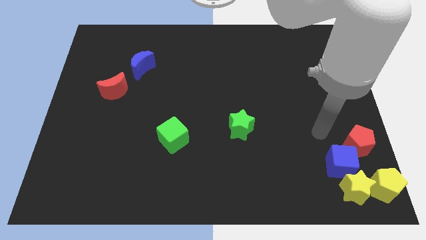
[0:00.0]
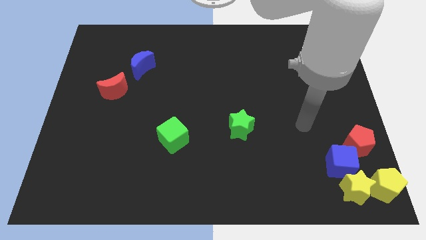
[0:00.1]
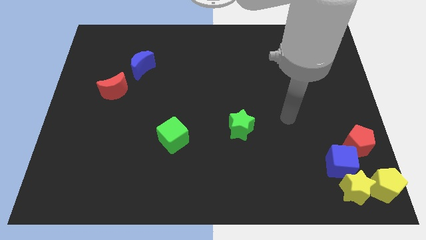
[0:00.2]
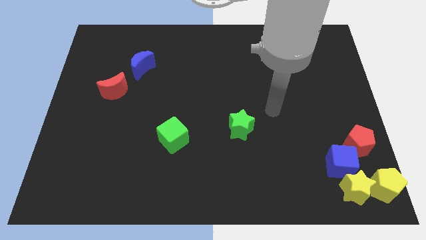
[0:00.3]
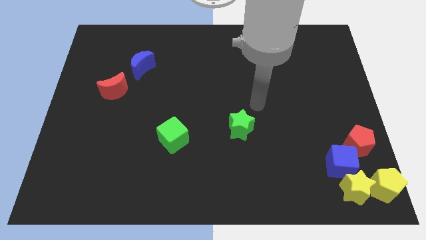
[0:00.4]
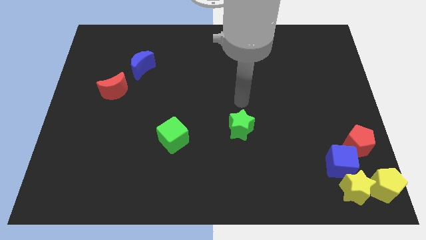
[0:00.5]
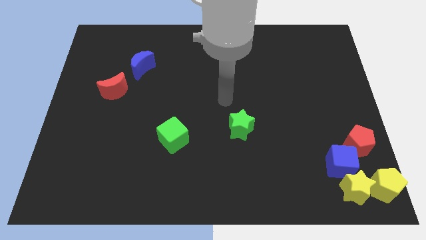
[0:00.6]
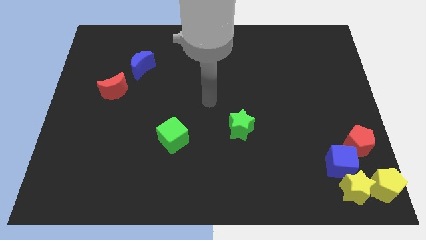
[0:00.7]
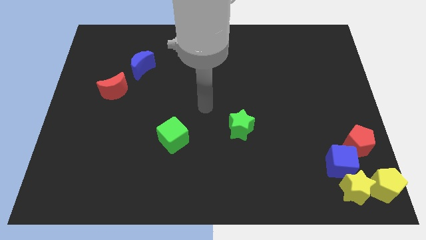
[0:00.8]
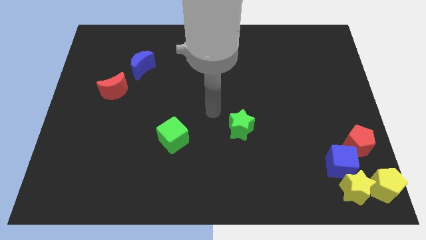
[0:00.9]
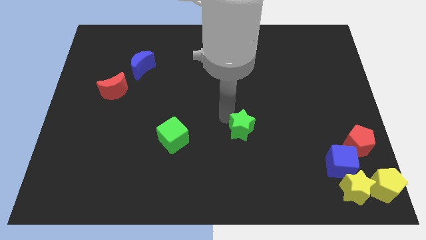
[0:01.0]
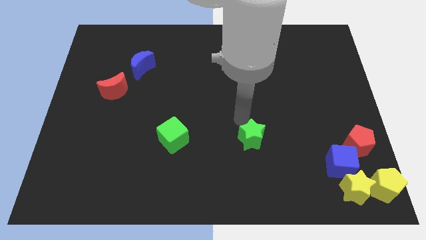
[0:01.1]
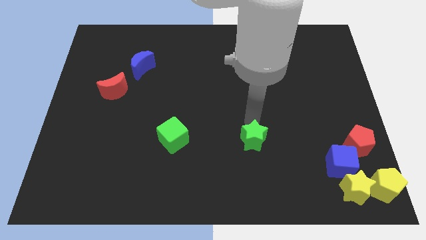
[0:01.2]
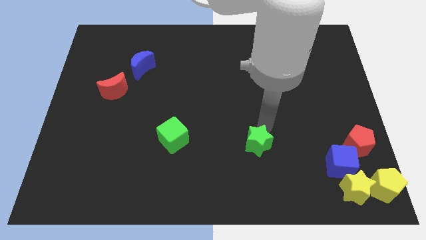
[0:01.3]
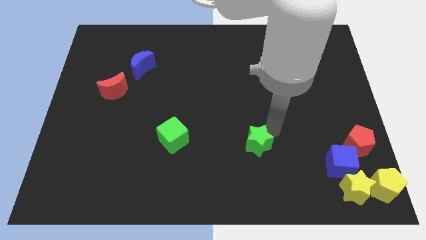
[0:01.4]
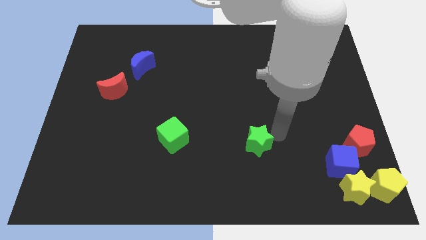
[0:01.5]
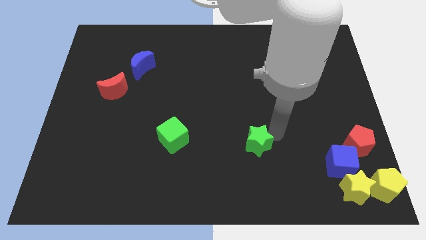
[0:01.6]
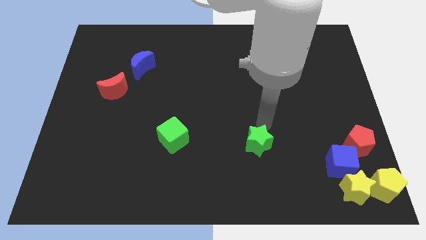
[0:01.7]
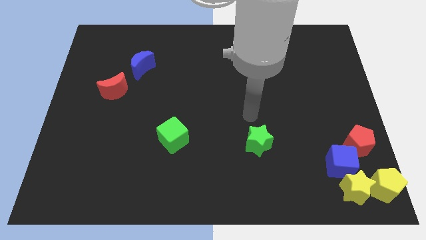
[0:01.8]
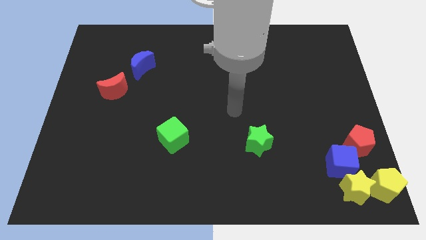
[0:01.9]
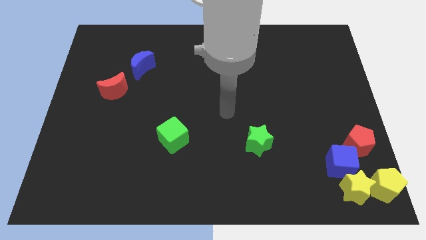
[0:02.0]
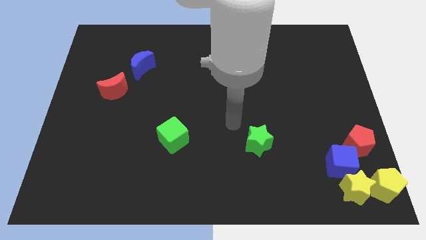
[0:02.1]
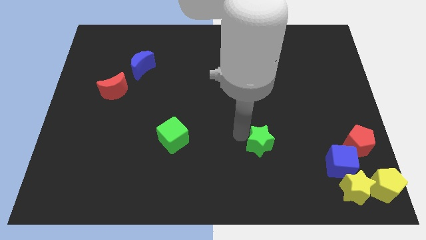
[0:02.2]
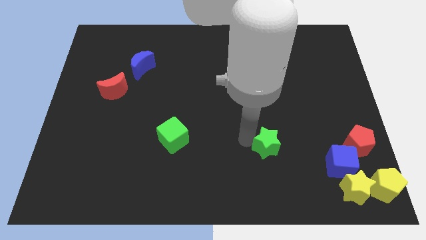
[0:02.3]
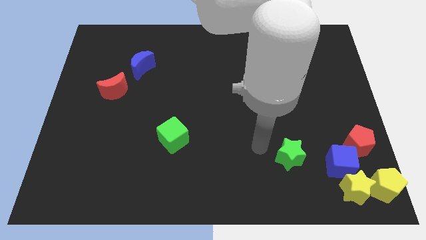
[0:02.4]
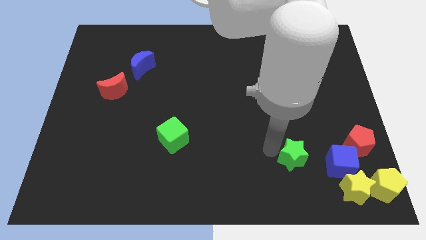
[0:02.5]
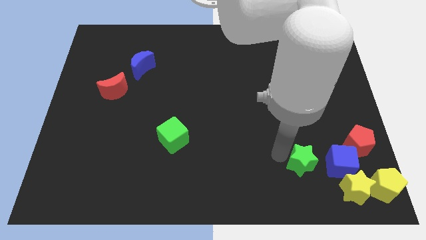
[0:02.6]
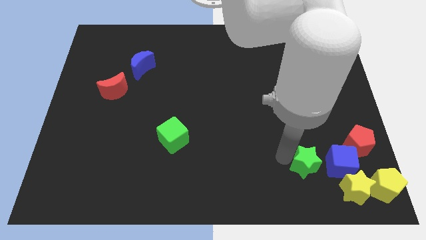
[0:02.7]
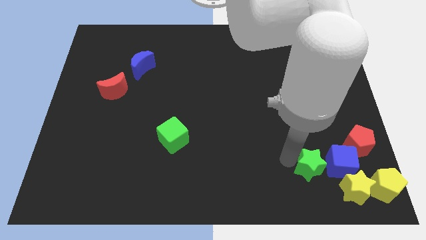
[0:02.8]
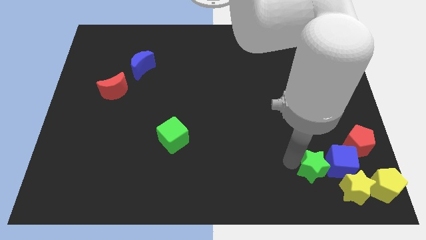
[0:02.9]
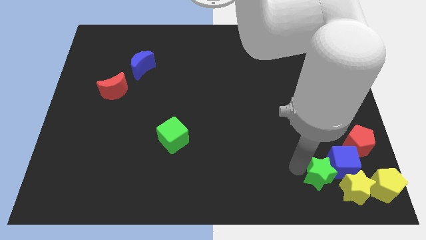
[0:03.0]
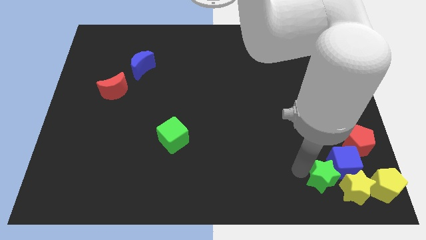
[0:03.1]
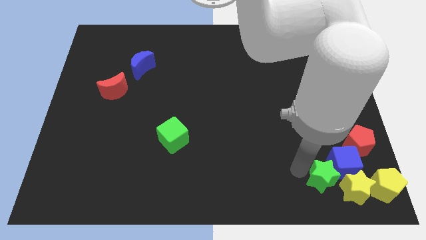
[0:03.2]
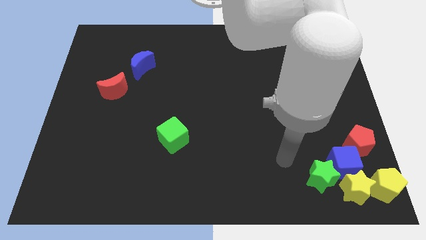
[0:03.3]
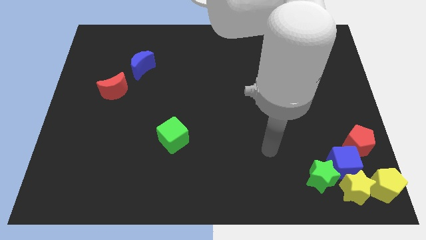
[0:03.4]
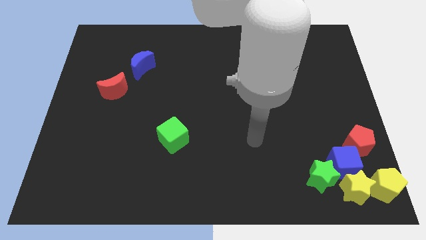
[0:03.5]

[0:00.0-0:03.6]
move the green star to the left of the blue cube

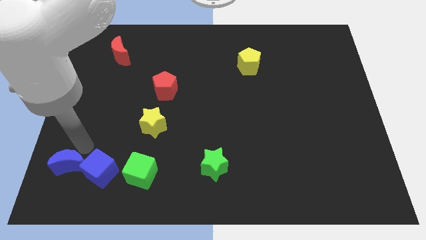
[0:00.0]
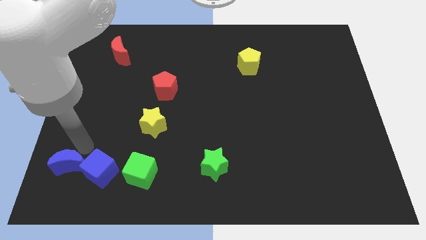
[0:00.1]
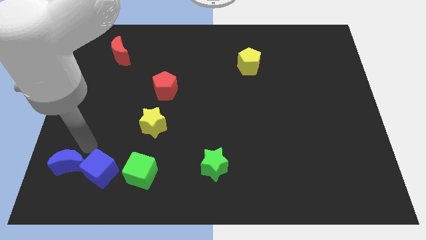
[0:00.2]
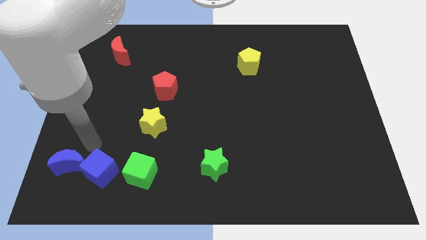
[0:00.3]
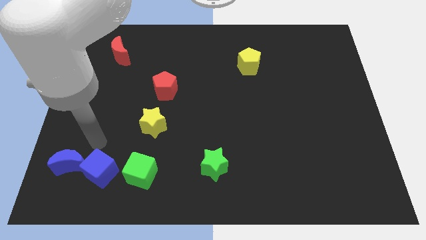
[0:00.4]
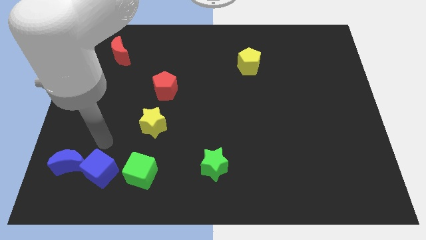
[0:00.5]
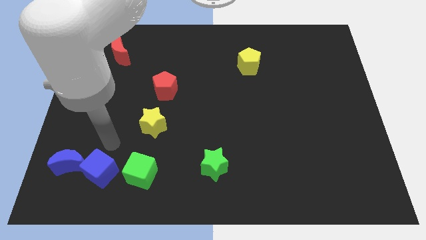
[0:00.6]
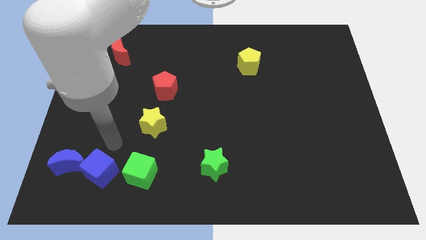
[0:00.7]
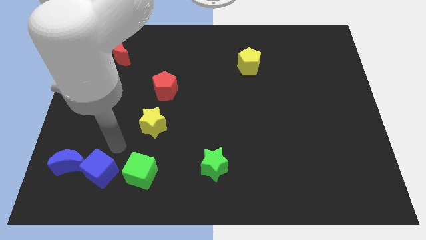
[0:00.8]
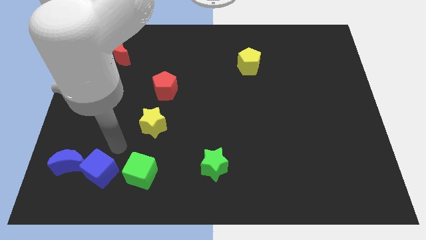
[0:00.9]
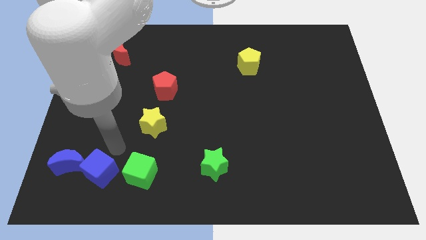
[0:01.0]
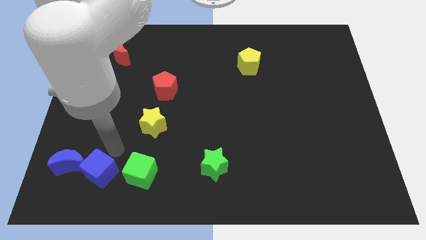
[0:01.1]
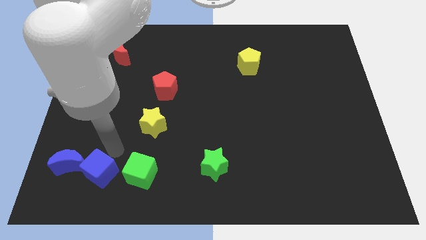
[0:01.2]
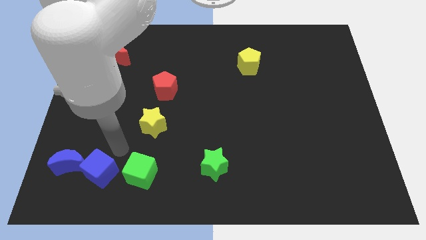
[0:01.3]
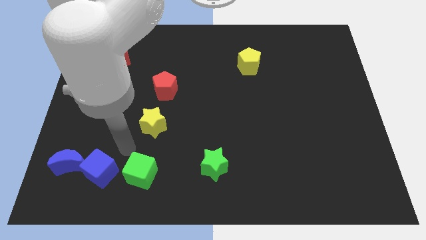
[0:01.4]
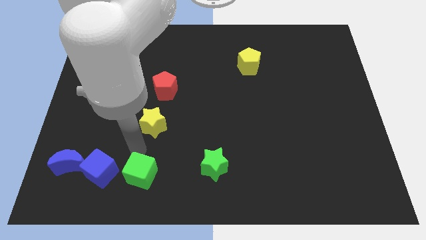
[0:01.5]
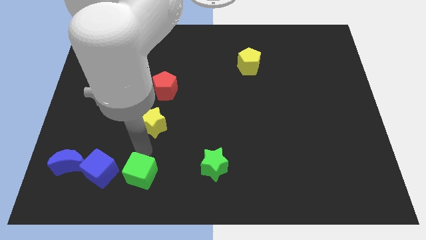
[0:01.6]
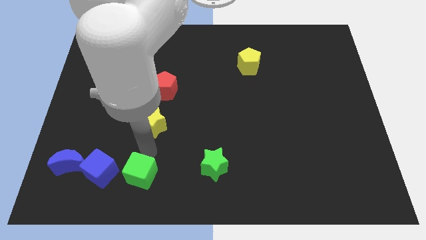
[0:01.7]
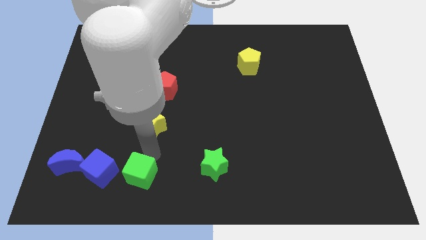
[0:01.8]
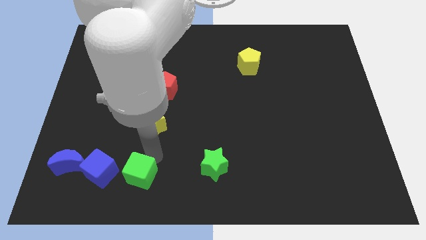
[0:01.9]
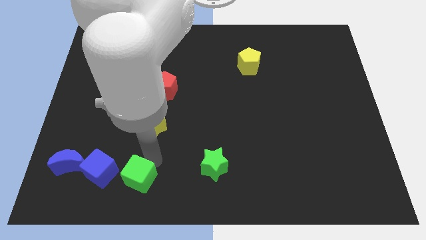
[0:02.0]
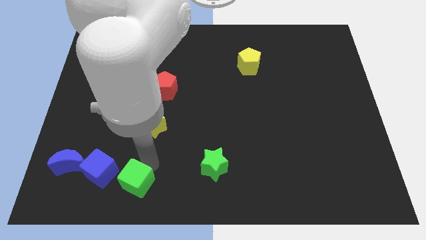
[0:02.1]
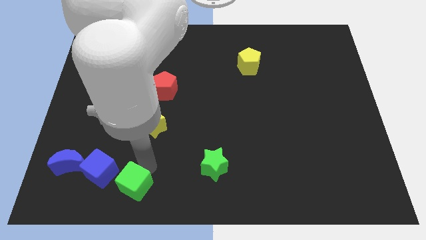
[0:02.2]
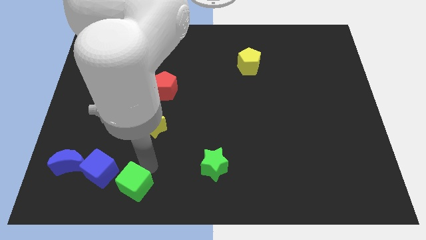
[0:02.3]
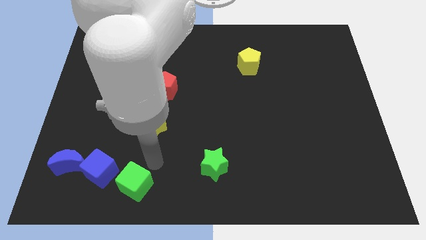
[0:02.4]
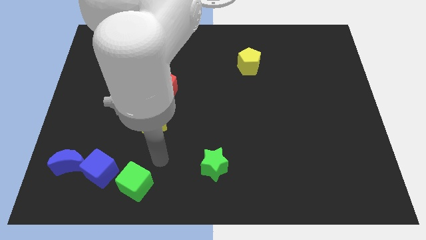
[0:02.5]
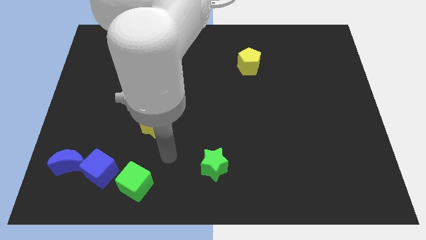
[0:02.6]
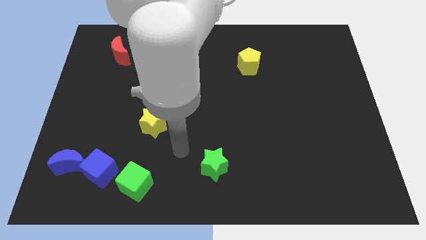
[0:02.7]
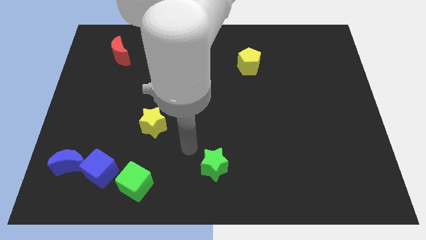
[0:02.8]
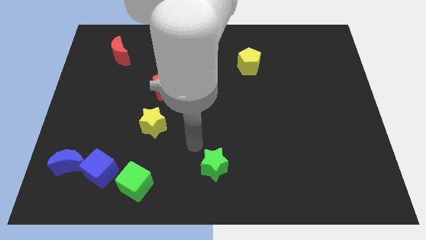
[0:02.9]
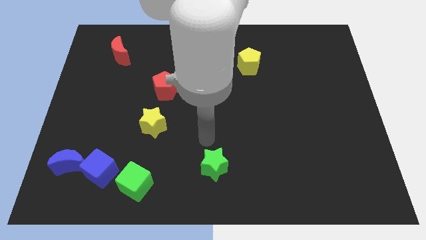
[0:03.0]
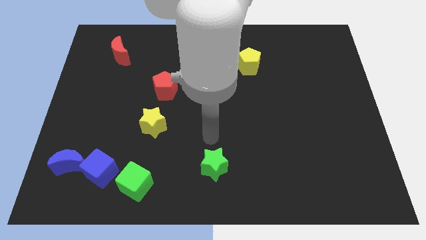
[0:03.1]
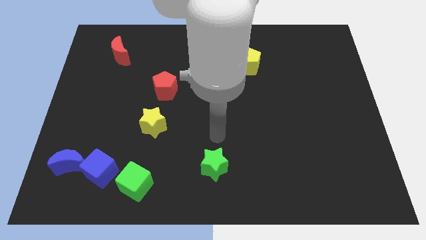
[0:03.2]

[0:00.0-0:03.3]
adjust the green cube to the right of the blue cube

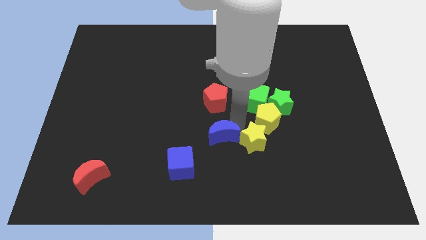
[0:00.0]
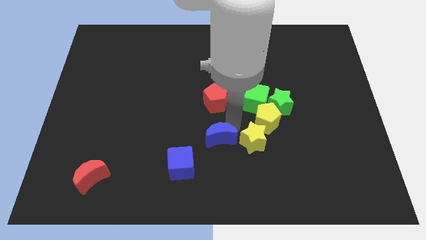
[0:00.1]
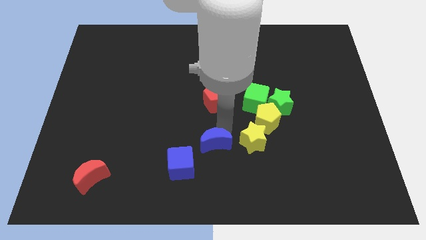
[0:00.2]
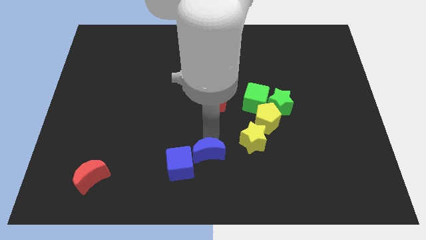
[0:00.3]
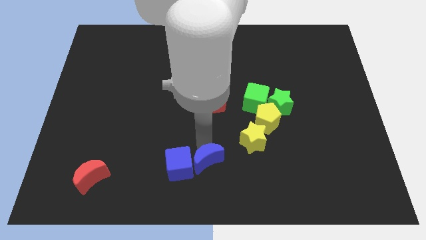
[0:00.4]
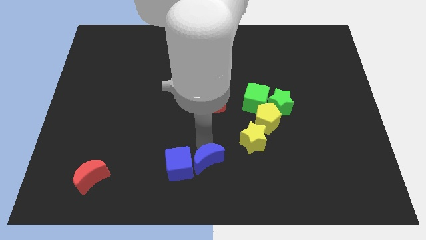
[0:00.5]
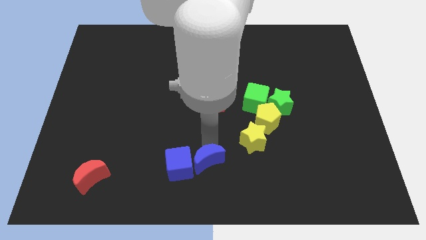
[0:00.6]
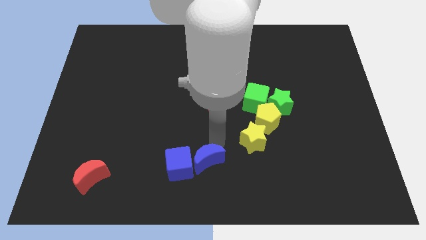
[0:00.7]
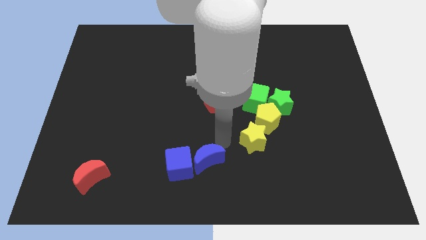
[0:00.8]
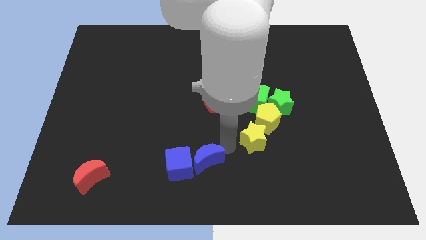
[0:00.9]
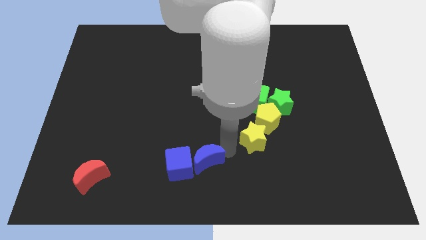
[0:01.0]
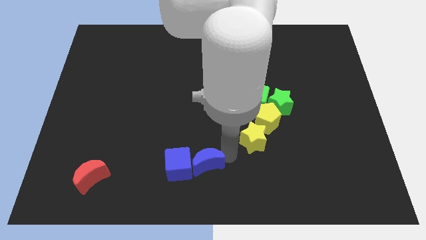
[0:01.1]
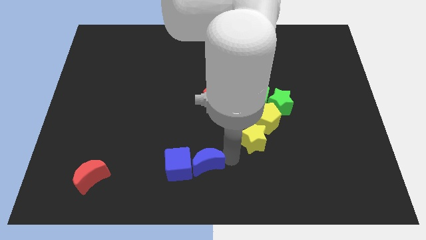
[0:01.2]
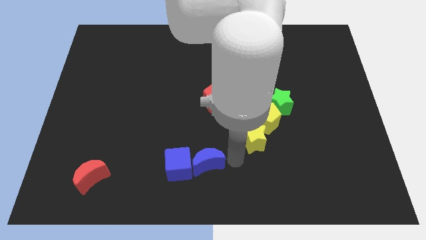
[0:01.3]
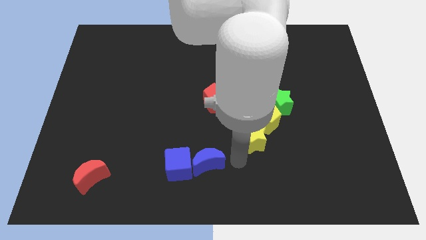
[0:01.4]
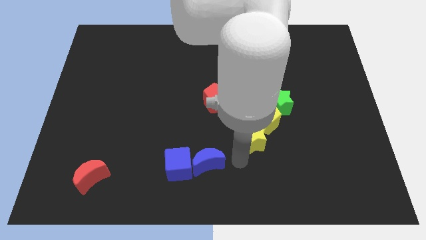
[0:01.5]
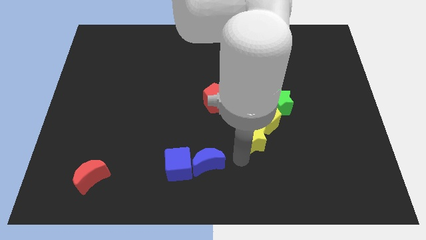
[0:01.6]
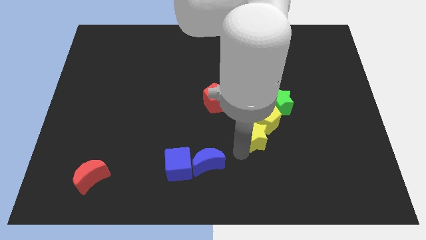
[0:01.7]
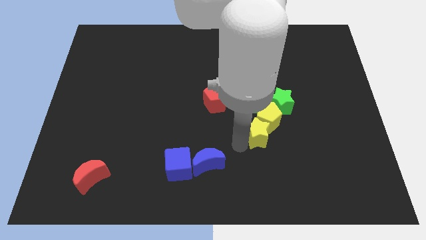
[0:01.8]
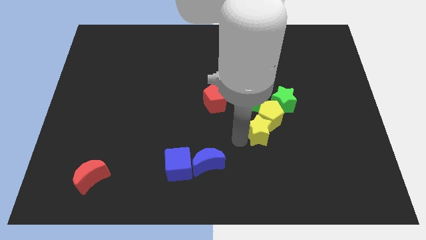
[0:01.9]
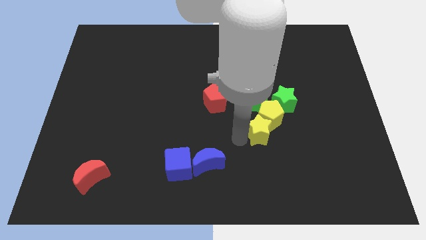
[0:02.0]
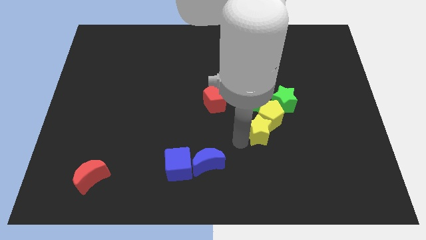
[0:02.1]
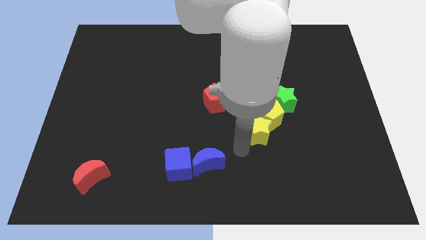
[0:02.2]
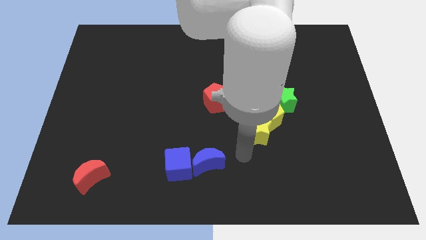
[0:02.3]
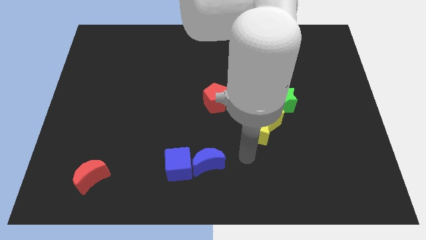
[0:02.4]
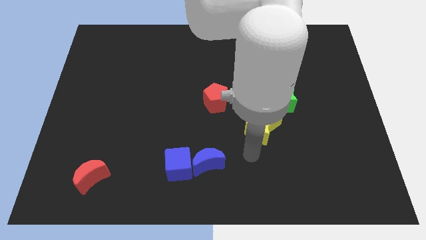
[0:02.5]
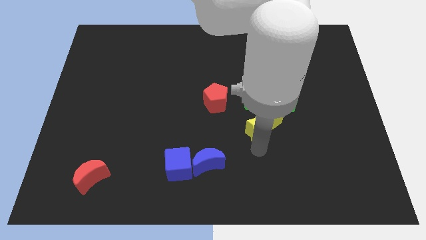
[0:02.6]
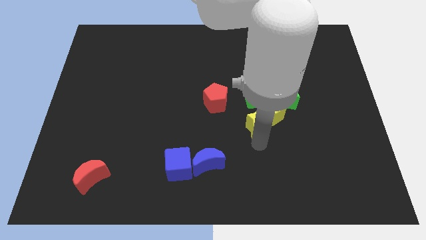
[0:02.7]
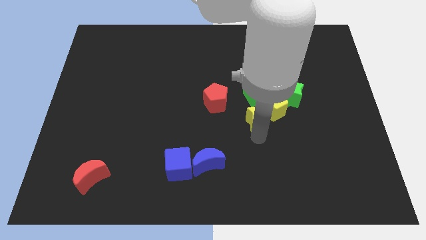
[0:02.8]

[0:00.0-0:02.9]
separate the blue blocks from a group of blocks
